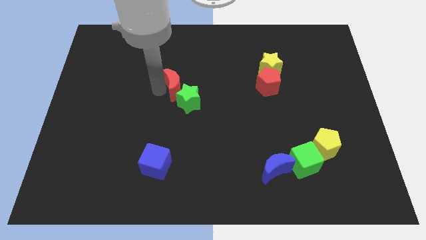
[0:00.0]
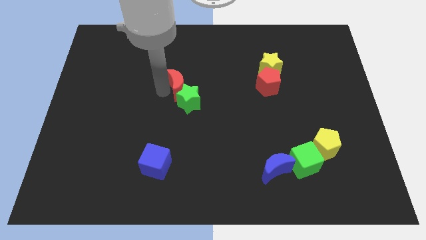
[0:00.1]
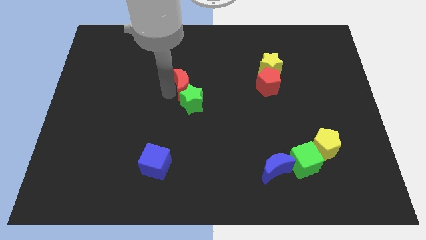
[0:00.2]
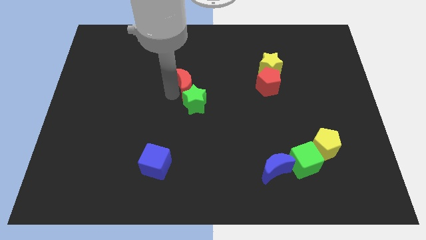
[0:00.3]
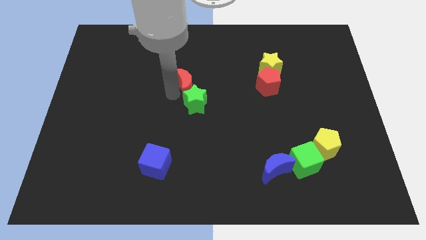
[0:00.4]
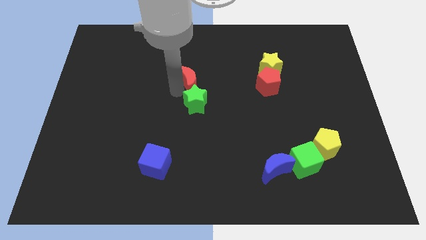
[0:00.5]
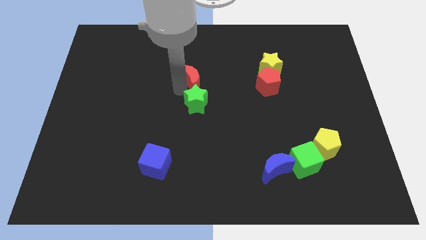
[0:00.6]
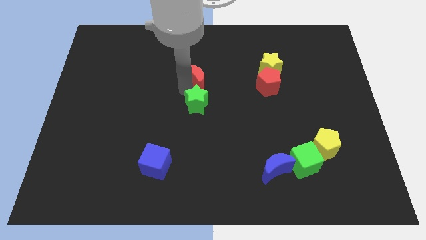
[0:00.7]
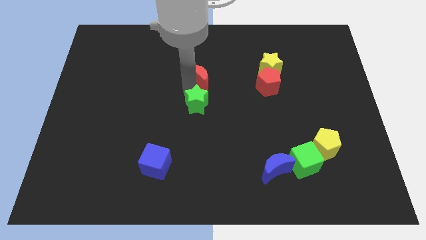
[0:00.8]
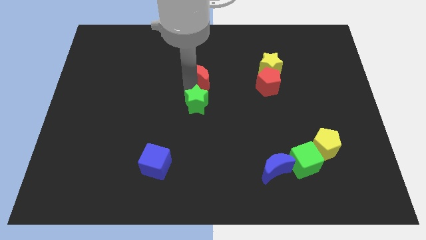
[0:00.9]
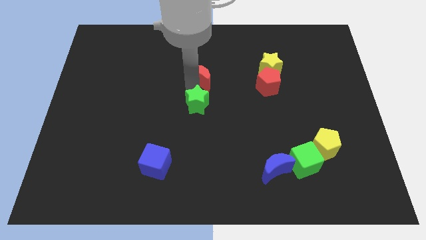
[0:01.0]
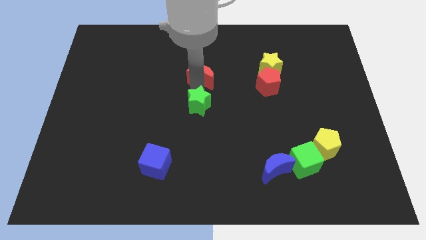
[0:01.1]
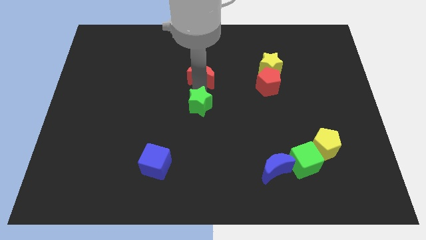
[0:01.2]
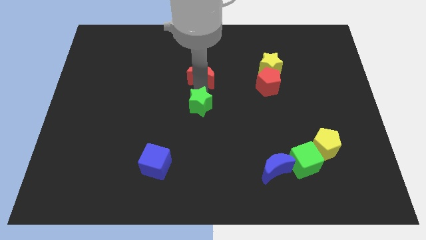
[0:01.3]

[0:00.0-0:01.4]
separate the red crescent and the green star

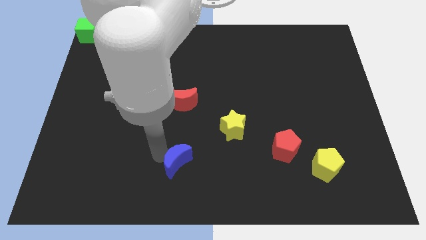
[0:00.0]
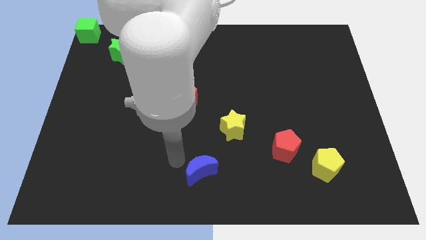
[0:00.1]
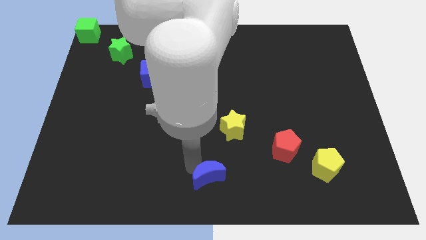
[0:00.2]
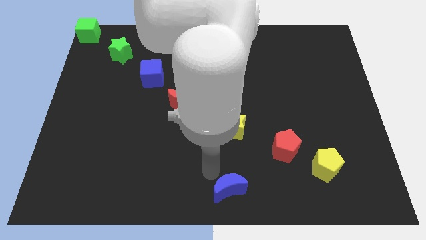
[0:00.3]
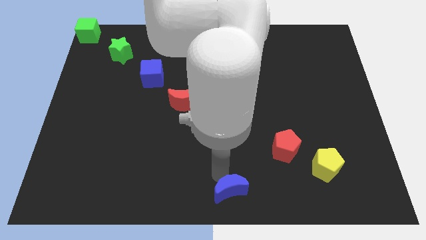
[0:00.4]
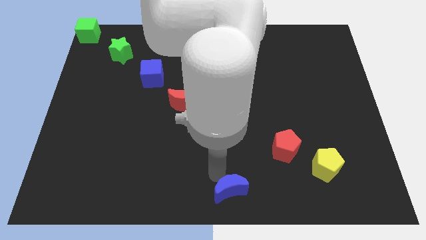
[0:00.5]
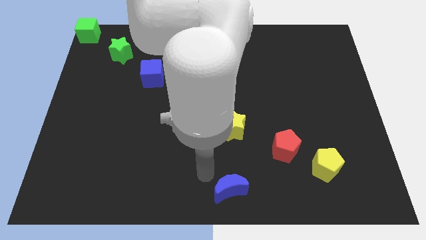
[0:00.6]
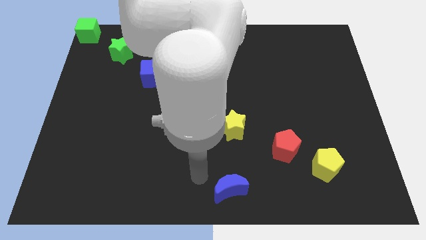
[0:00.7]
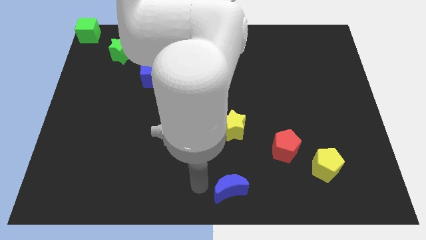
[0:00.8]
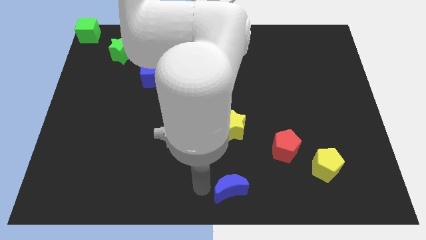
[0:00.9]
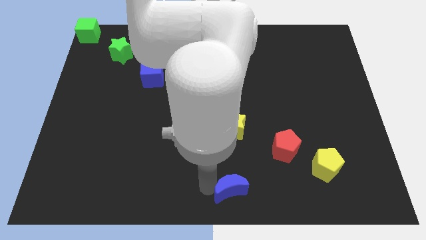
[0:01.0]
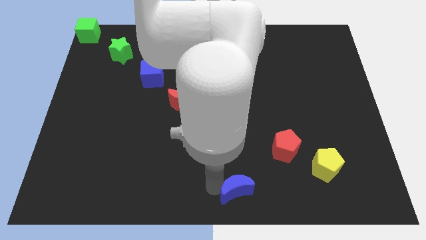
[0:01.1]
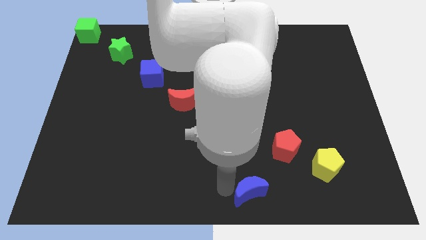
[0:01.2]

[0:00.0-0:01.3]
place the blue moon below the red pentagon

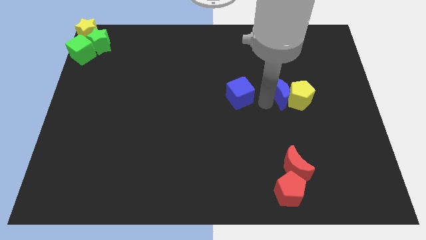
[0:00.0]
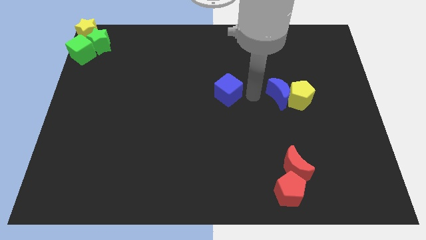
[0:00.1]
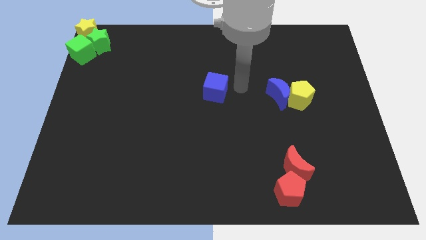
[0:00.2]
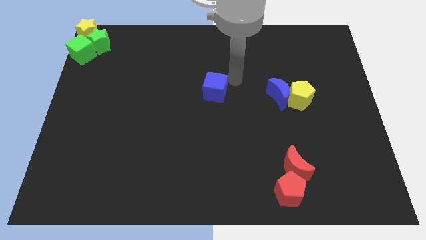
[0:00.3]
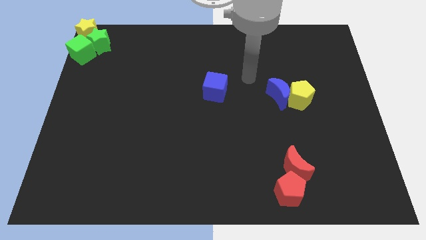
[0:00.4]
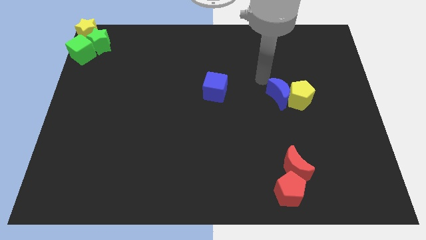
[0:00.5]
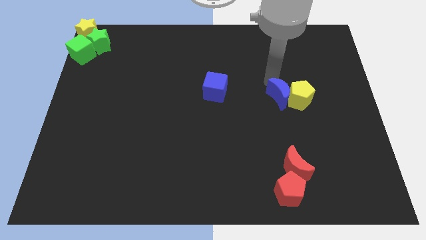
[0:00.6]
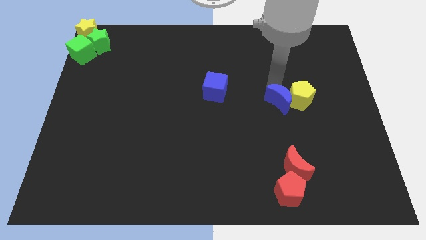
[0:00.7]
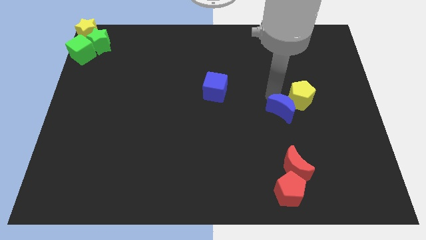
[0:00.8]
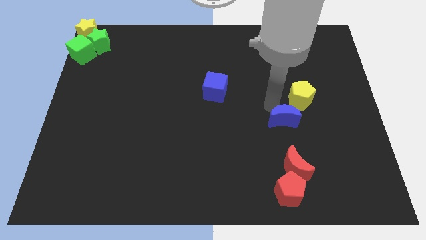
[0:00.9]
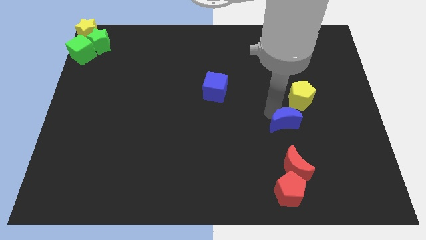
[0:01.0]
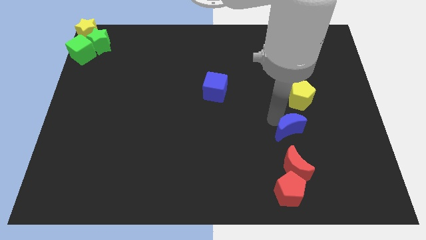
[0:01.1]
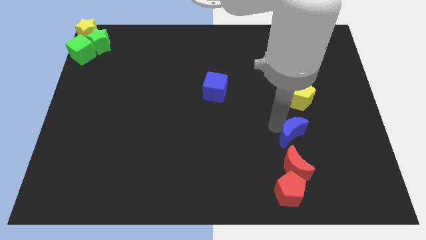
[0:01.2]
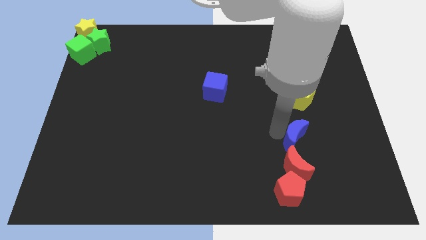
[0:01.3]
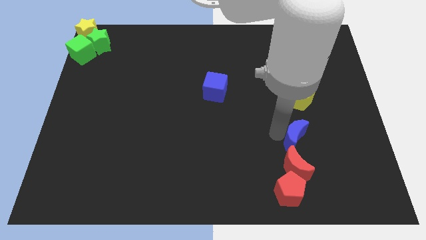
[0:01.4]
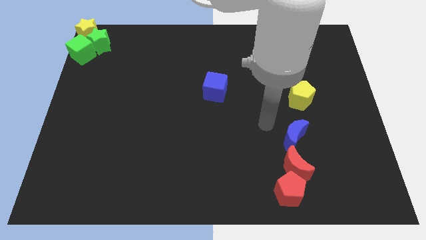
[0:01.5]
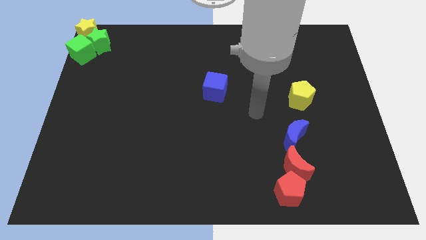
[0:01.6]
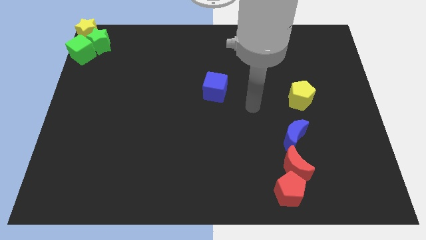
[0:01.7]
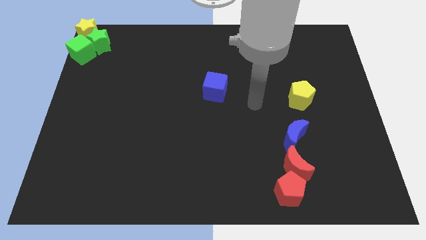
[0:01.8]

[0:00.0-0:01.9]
separate the blue moon from the yellow pentagon

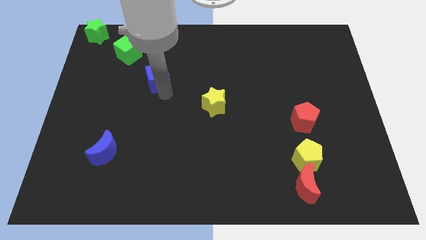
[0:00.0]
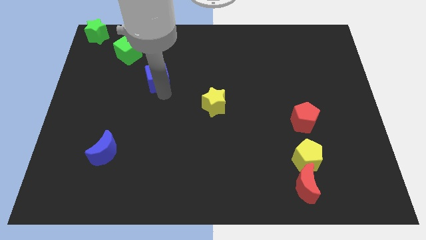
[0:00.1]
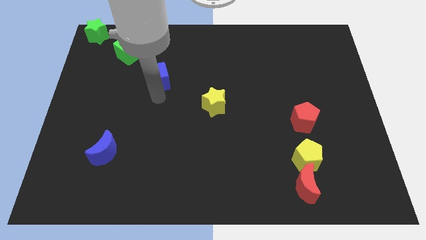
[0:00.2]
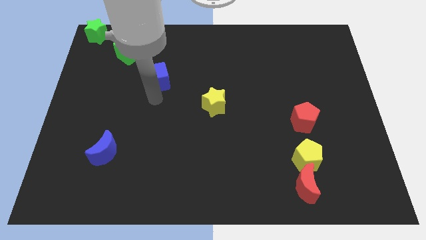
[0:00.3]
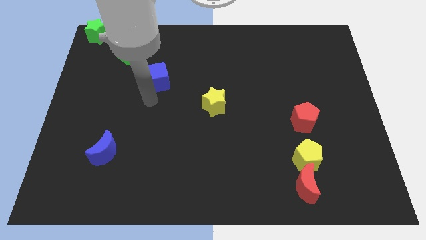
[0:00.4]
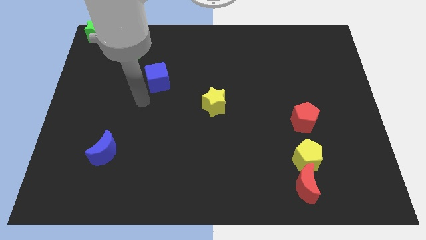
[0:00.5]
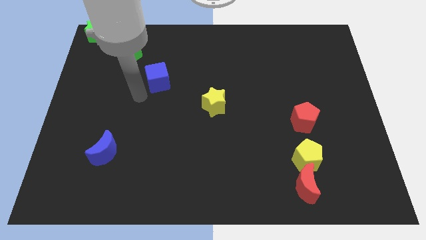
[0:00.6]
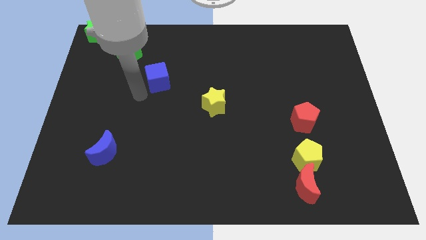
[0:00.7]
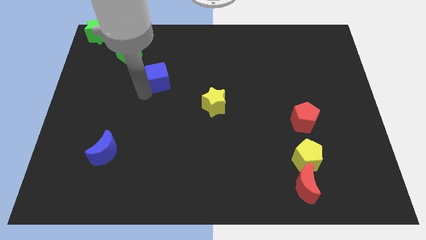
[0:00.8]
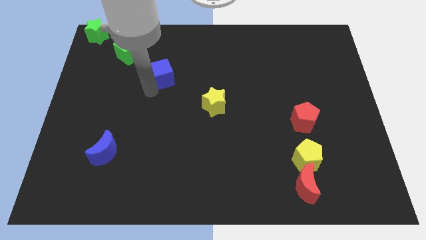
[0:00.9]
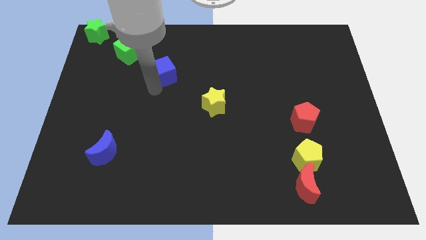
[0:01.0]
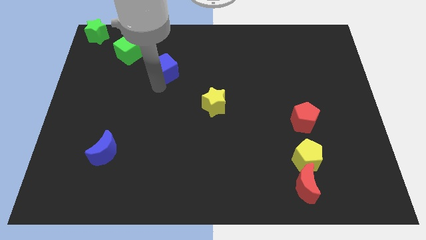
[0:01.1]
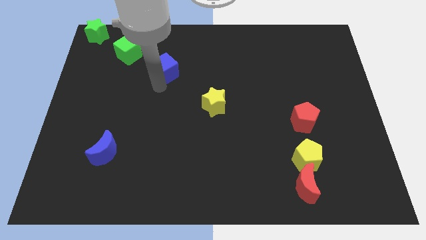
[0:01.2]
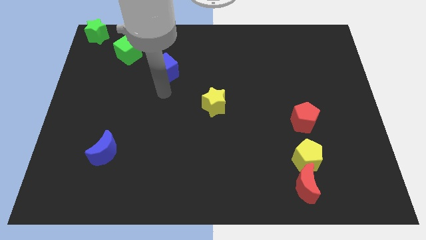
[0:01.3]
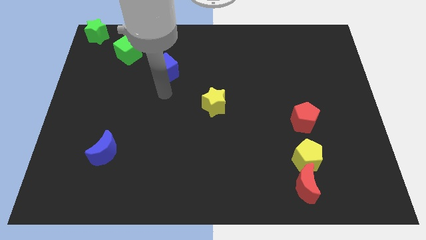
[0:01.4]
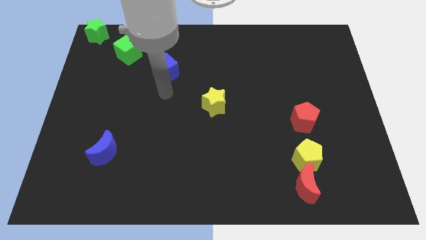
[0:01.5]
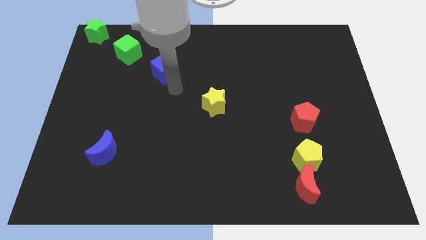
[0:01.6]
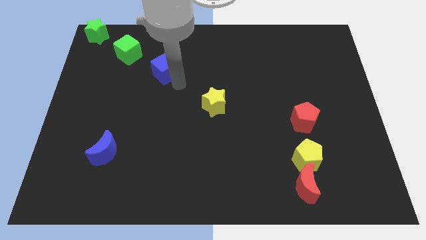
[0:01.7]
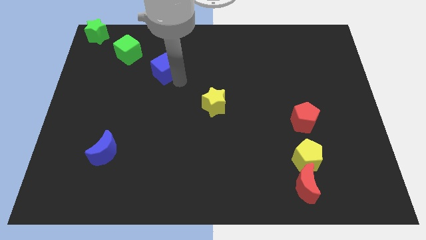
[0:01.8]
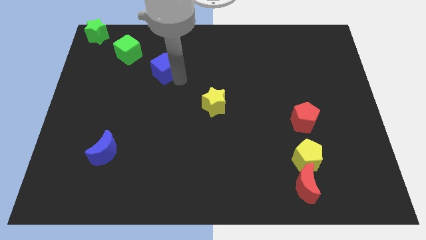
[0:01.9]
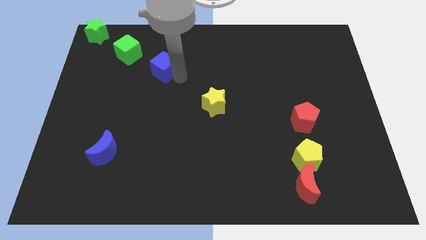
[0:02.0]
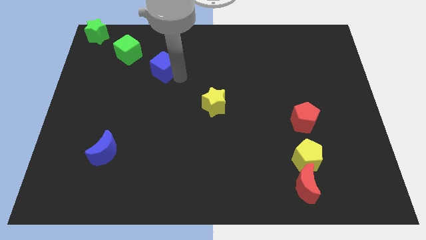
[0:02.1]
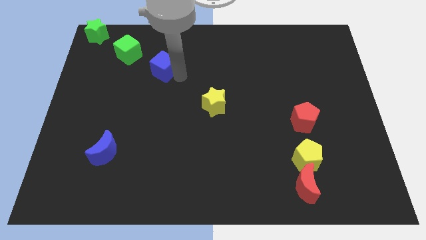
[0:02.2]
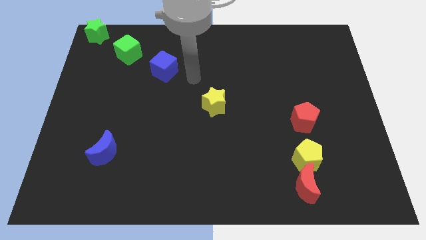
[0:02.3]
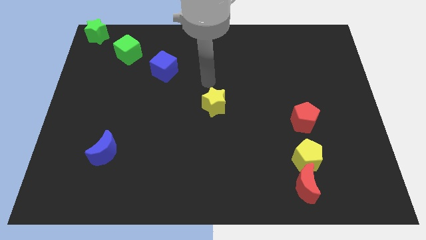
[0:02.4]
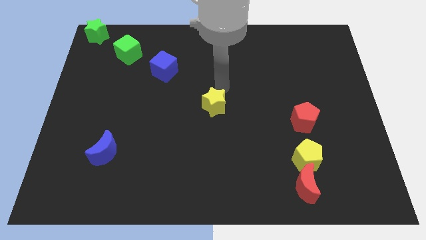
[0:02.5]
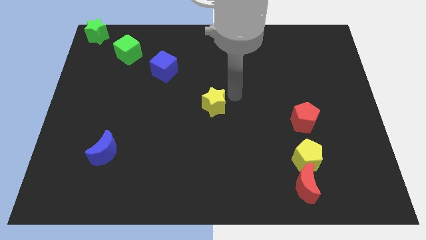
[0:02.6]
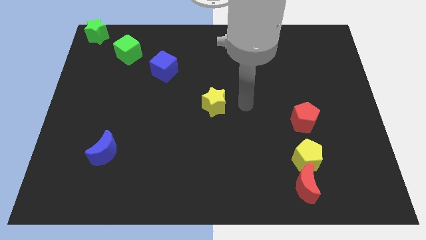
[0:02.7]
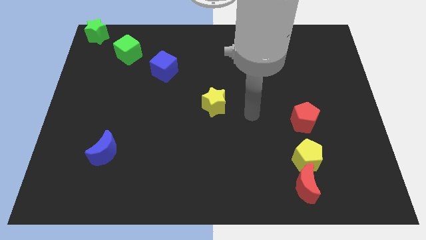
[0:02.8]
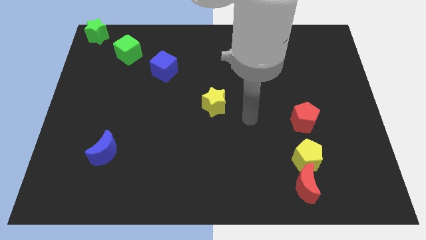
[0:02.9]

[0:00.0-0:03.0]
move the blue cube diagonally right to the green cube

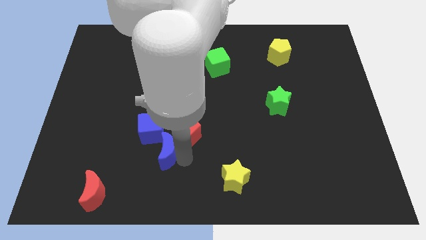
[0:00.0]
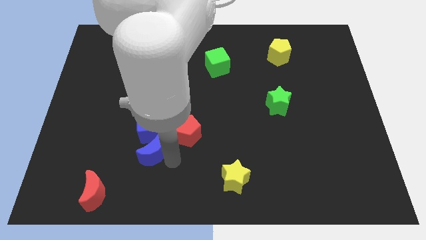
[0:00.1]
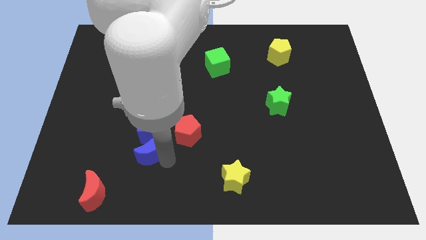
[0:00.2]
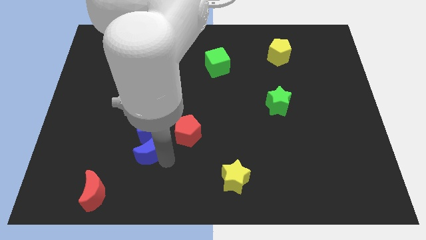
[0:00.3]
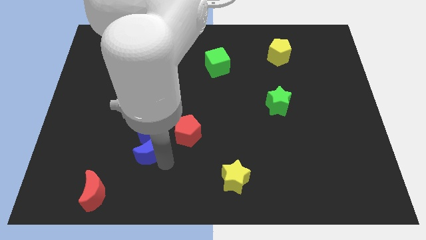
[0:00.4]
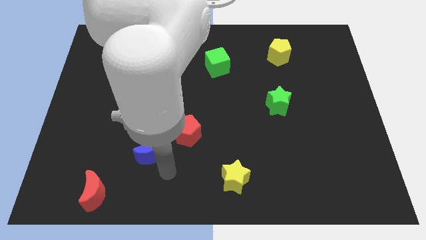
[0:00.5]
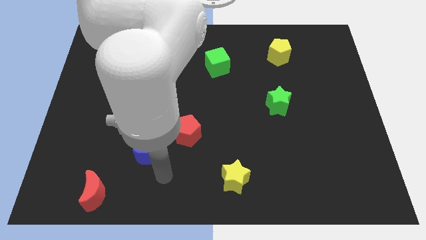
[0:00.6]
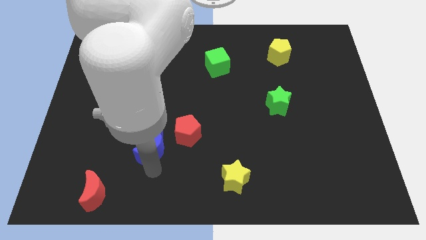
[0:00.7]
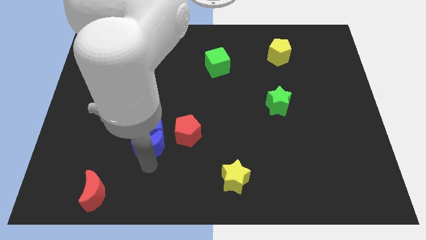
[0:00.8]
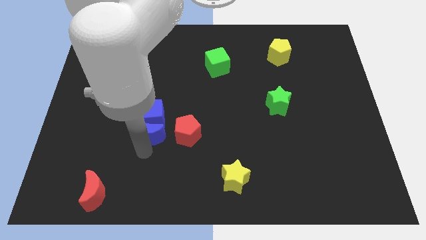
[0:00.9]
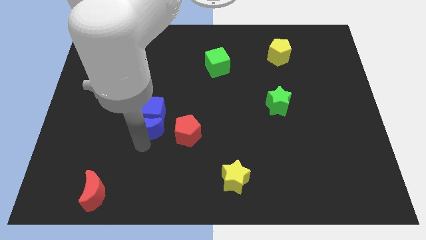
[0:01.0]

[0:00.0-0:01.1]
place blue moon below blue cube

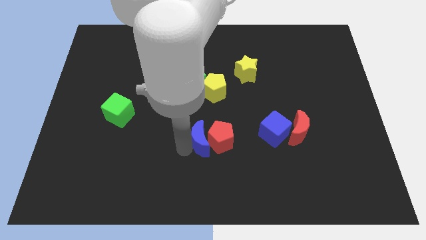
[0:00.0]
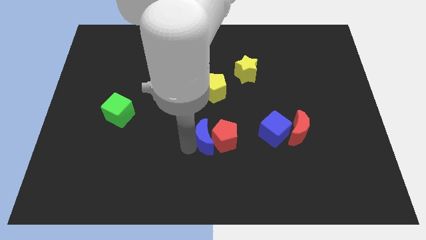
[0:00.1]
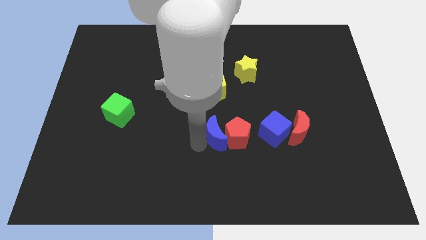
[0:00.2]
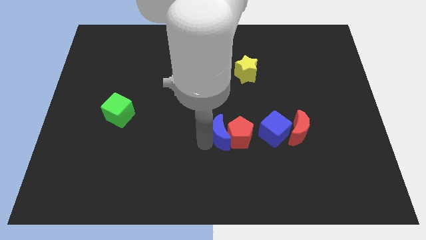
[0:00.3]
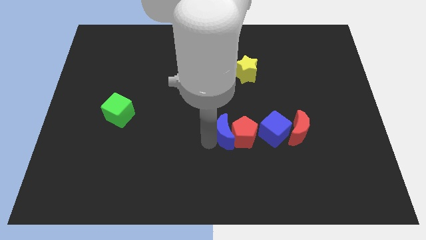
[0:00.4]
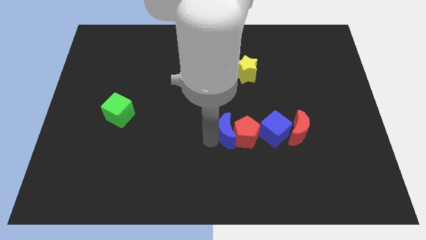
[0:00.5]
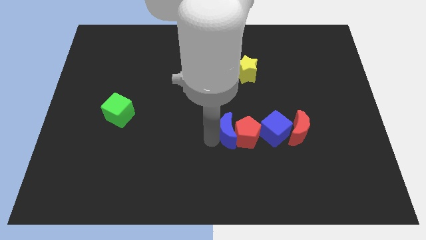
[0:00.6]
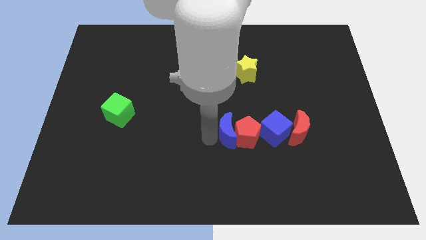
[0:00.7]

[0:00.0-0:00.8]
place blue crescent below yellow pentagon
